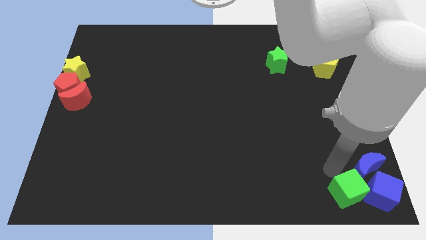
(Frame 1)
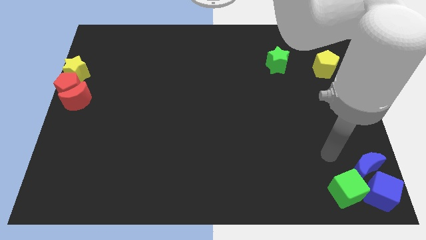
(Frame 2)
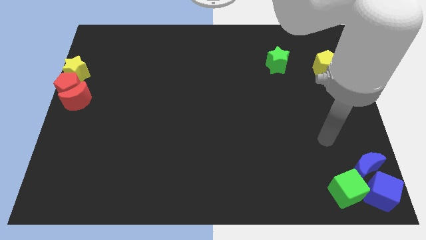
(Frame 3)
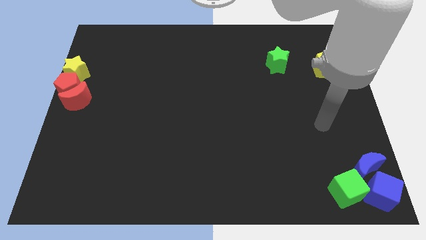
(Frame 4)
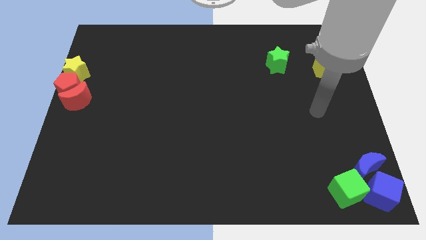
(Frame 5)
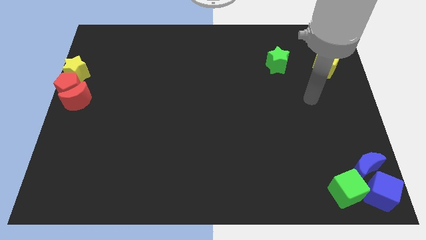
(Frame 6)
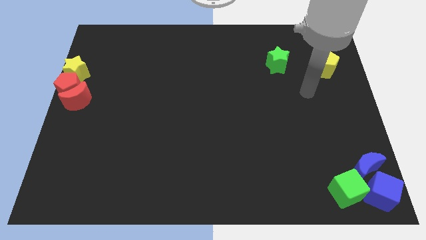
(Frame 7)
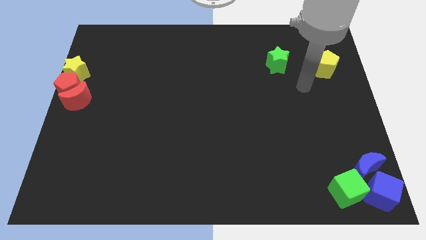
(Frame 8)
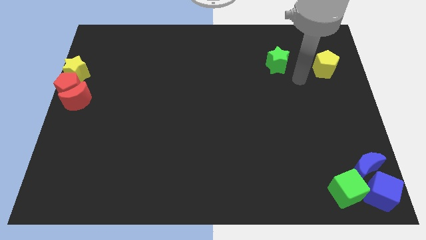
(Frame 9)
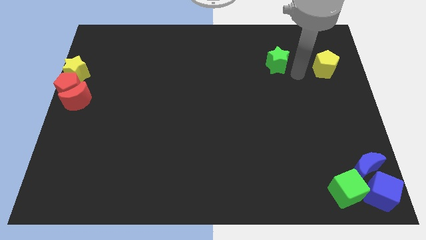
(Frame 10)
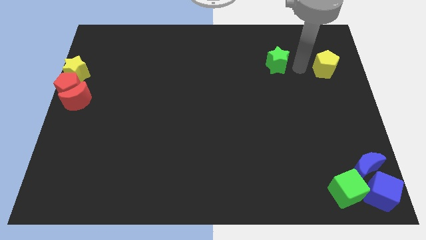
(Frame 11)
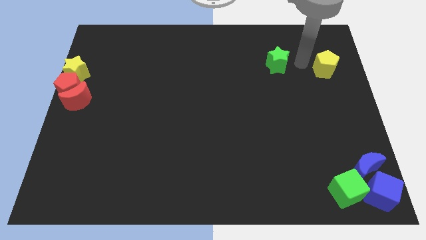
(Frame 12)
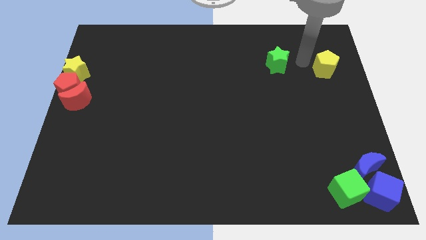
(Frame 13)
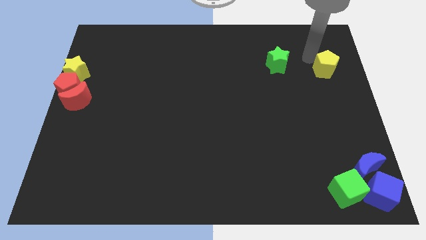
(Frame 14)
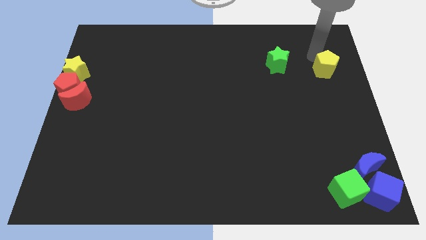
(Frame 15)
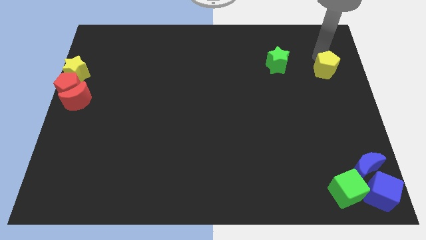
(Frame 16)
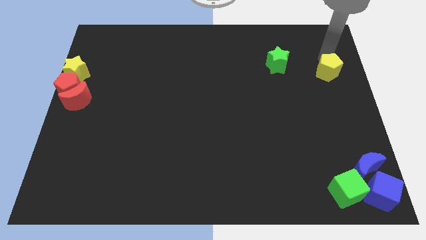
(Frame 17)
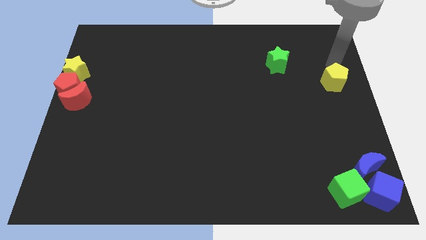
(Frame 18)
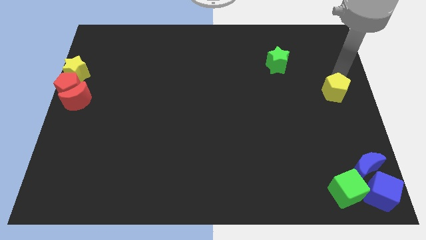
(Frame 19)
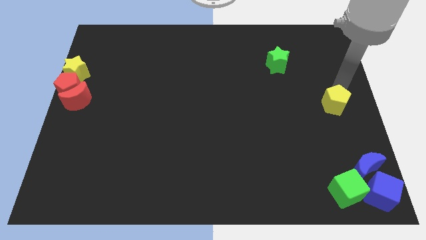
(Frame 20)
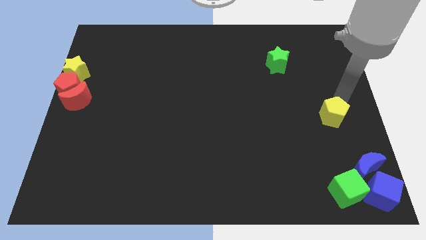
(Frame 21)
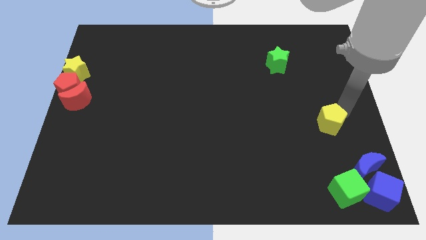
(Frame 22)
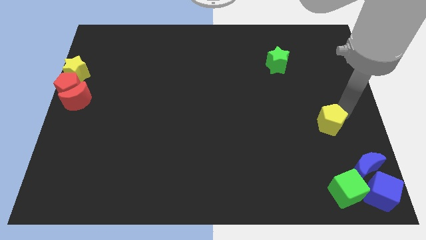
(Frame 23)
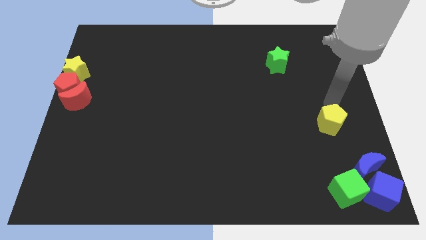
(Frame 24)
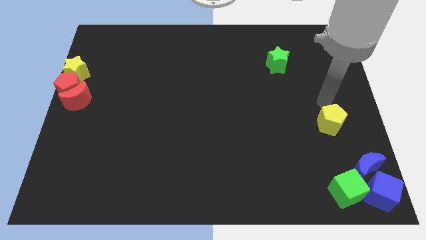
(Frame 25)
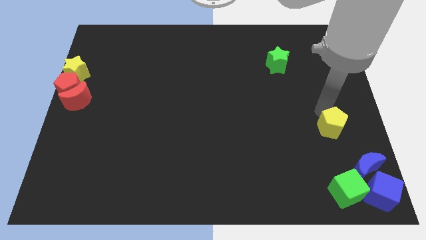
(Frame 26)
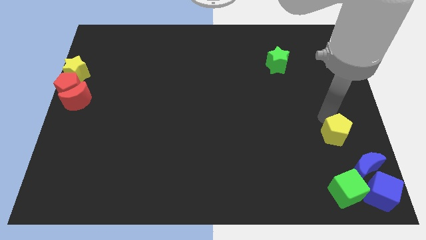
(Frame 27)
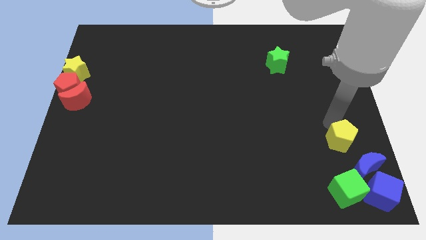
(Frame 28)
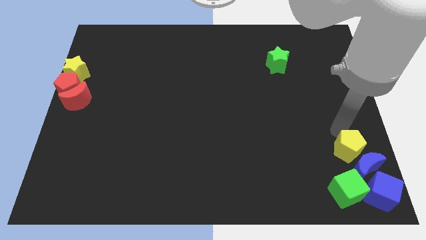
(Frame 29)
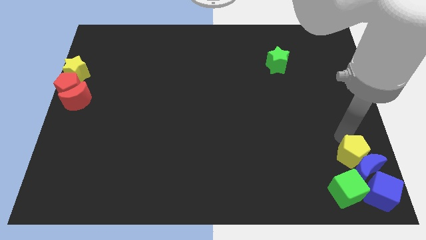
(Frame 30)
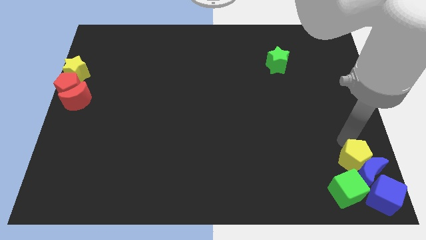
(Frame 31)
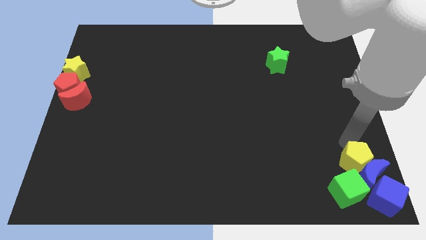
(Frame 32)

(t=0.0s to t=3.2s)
push the yellow pentagon into blue crescent

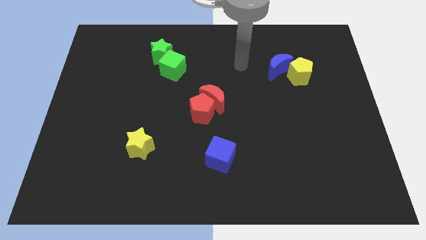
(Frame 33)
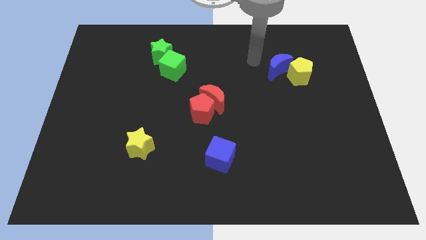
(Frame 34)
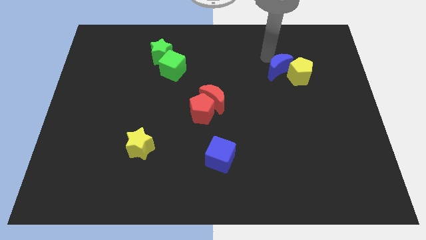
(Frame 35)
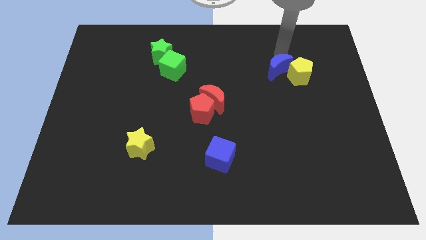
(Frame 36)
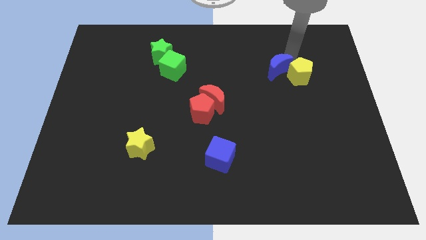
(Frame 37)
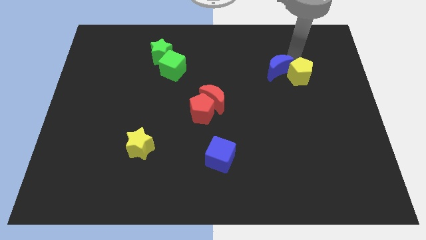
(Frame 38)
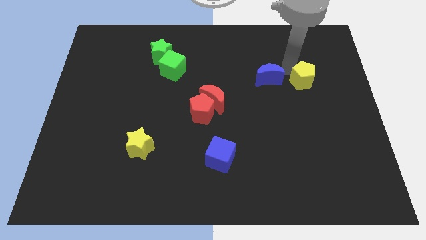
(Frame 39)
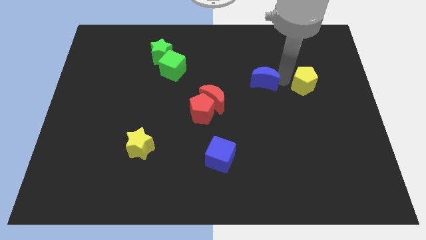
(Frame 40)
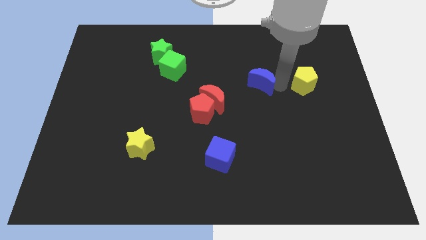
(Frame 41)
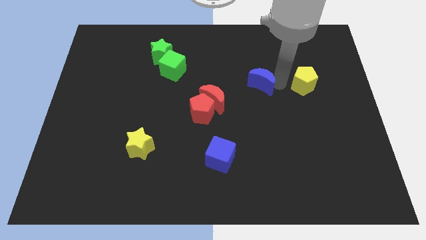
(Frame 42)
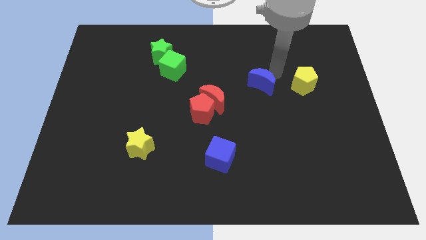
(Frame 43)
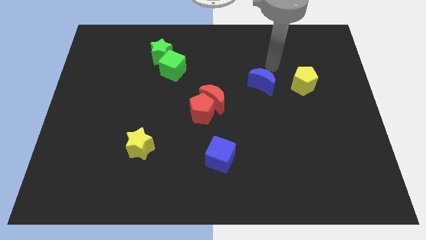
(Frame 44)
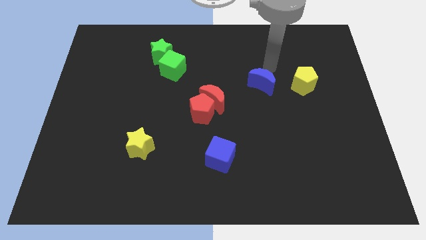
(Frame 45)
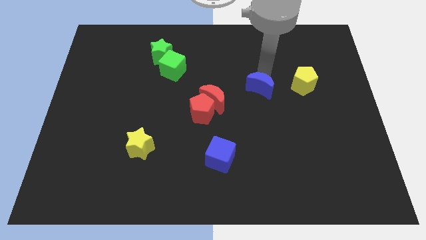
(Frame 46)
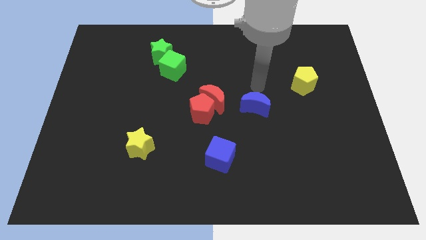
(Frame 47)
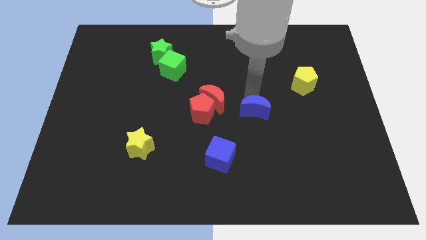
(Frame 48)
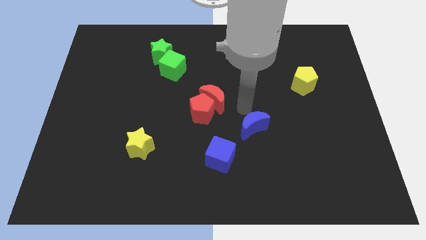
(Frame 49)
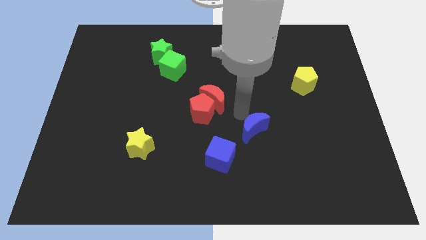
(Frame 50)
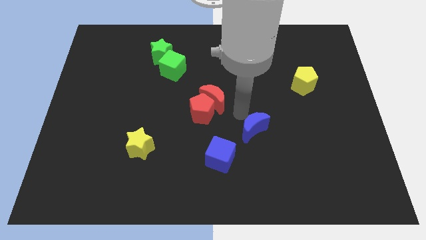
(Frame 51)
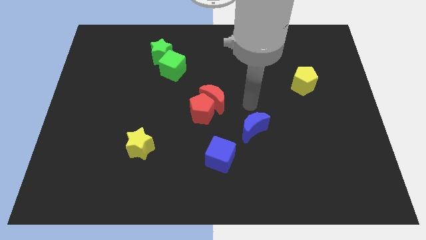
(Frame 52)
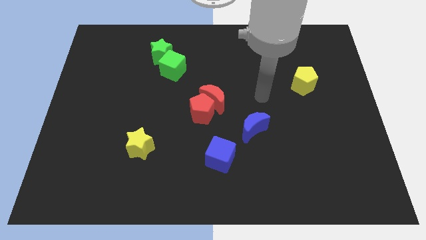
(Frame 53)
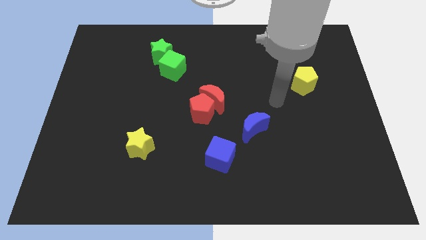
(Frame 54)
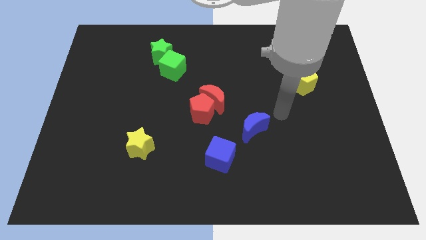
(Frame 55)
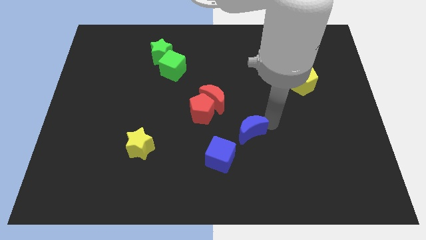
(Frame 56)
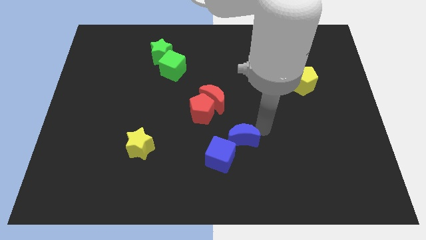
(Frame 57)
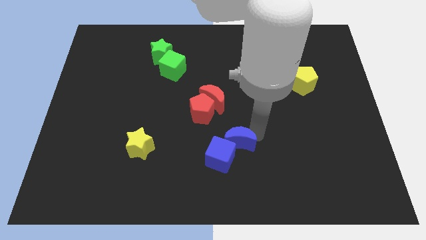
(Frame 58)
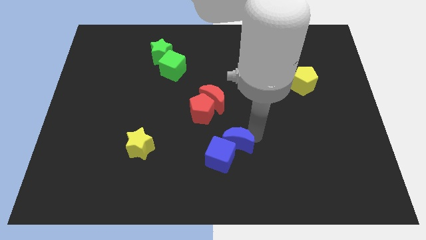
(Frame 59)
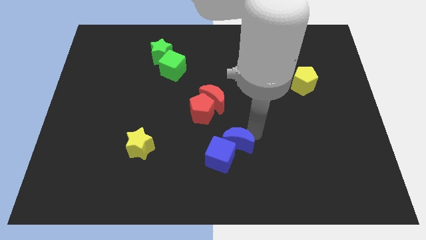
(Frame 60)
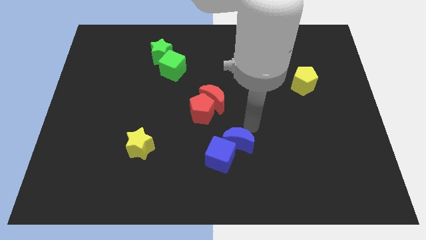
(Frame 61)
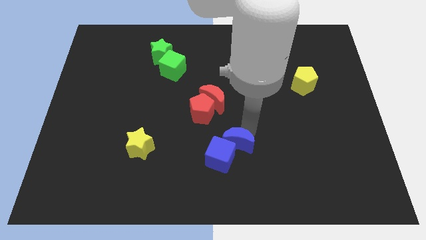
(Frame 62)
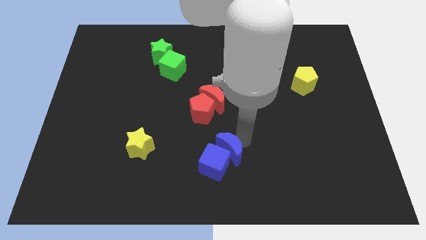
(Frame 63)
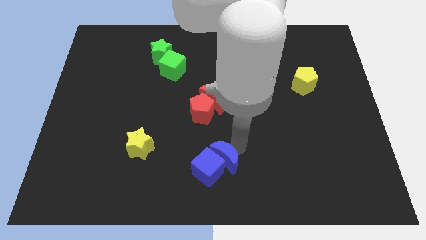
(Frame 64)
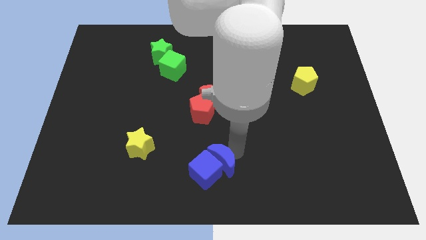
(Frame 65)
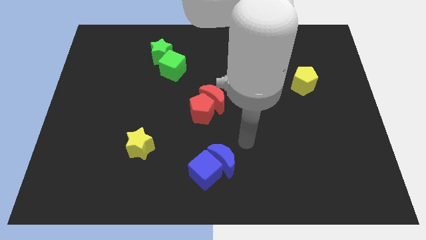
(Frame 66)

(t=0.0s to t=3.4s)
place the blue crescent towards the blue cube

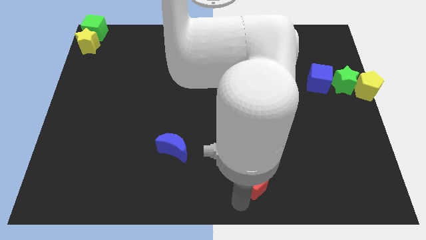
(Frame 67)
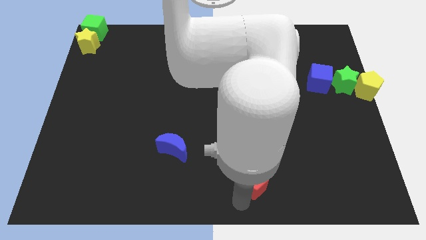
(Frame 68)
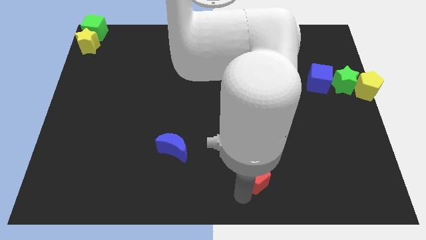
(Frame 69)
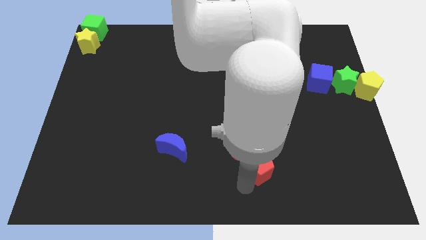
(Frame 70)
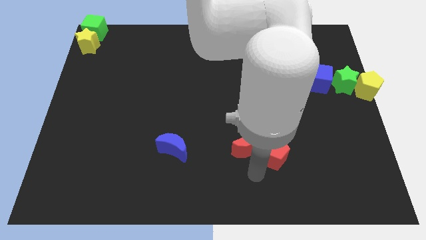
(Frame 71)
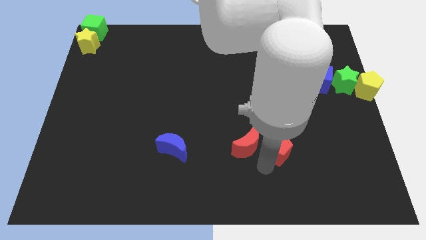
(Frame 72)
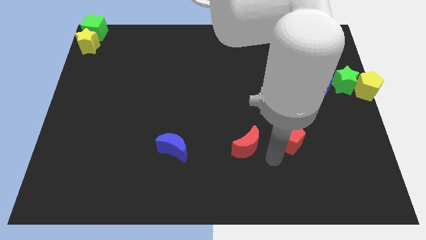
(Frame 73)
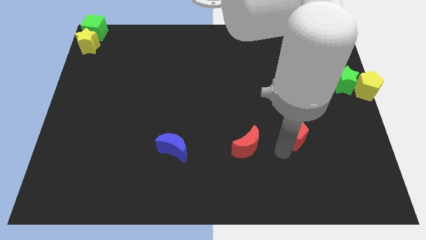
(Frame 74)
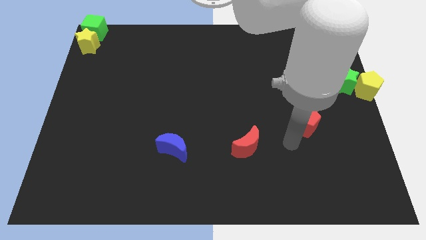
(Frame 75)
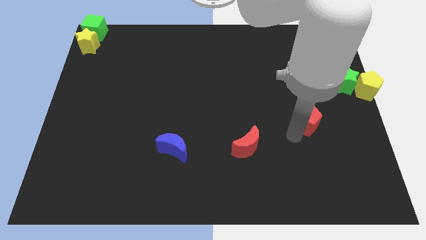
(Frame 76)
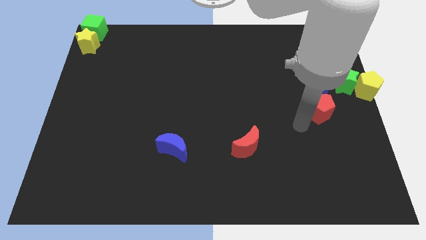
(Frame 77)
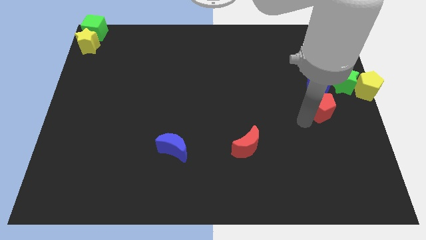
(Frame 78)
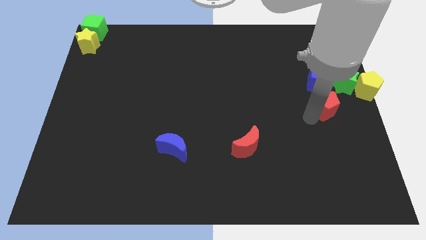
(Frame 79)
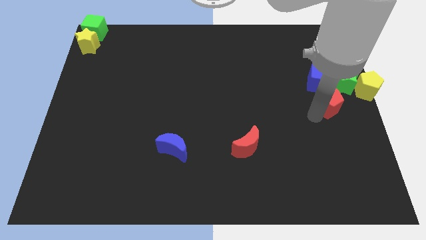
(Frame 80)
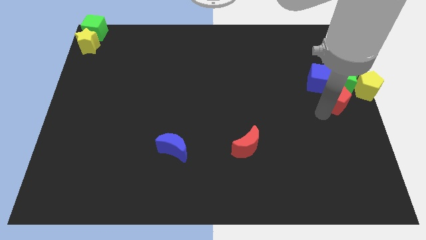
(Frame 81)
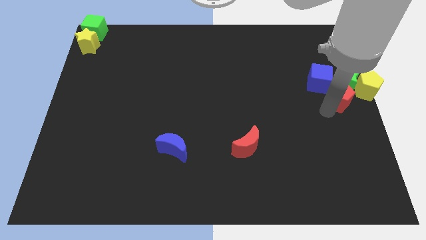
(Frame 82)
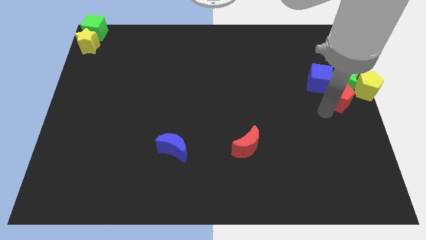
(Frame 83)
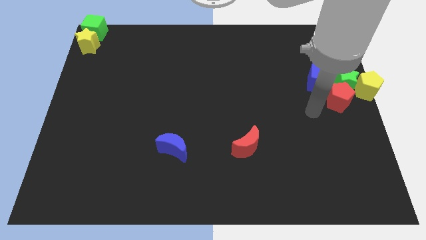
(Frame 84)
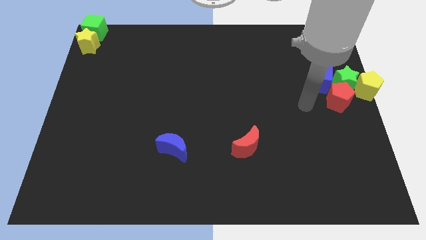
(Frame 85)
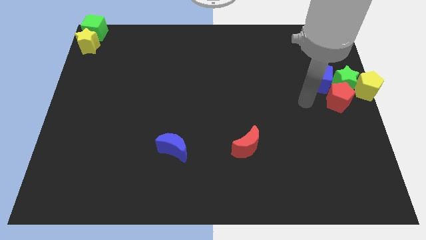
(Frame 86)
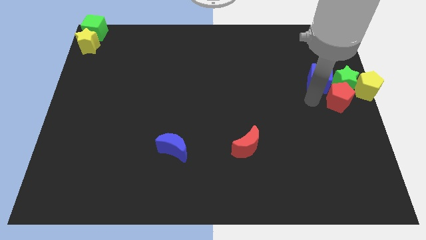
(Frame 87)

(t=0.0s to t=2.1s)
place the red pentagon diagonal below green star

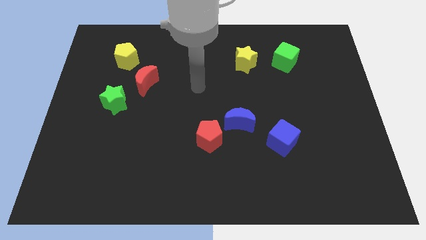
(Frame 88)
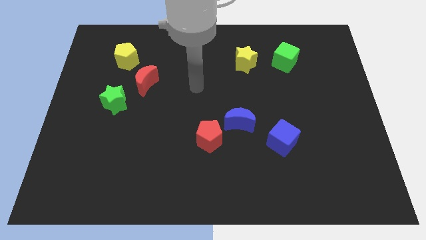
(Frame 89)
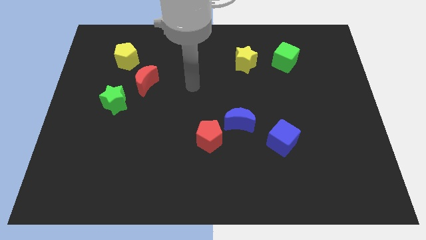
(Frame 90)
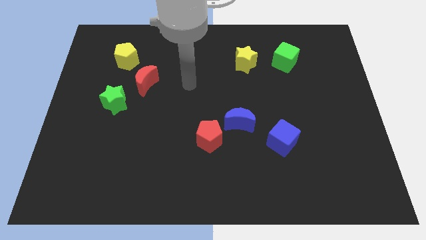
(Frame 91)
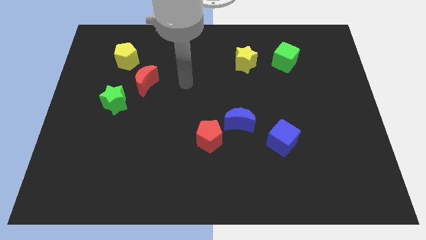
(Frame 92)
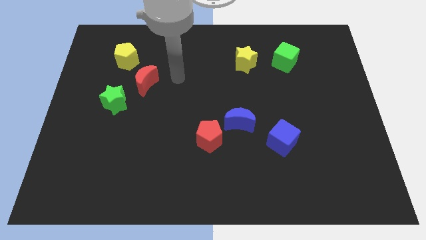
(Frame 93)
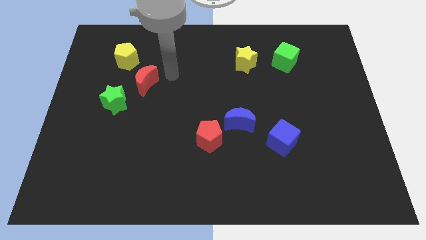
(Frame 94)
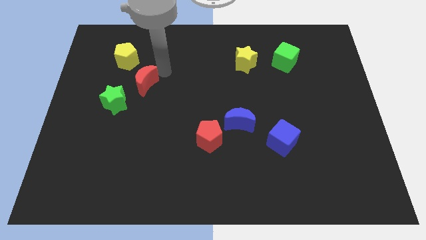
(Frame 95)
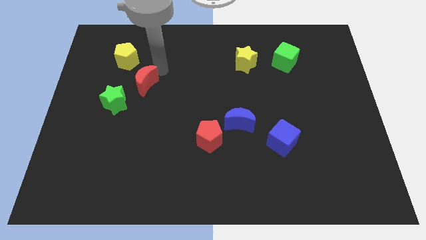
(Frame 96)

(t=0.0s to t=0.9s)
place your arm to the top of red crescent
